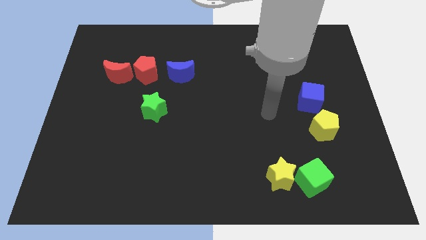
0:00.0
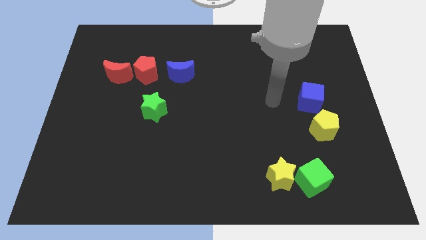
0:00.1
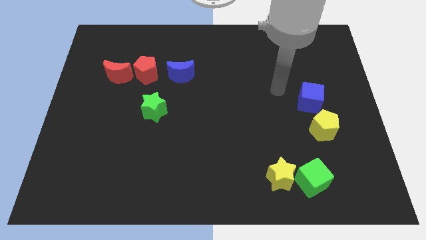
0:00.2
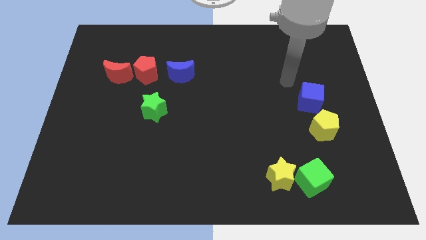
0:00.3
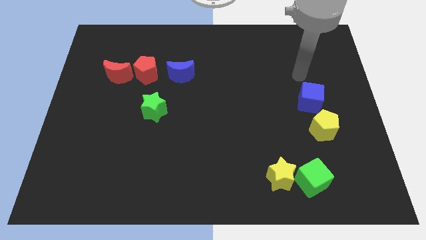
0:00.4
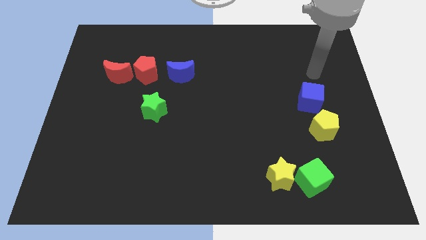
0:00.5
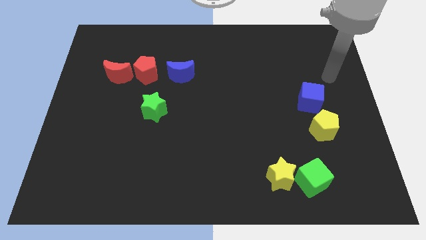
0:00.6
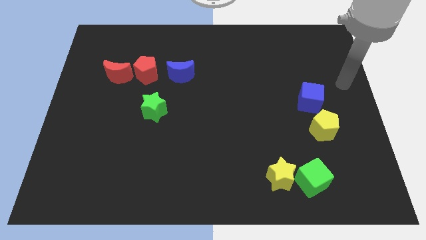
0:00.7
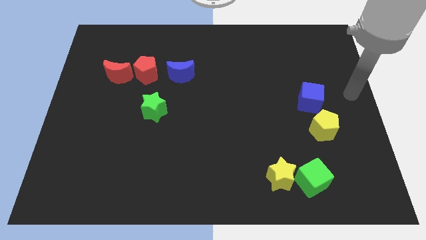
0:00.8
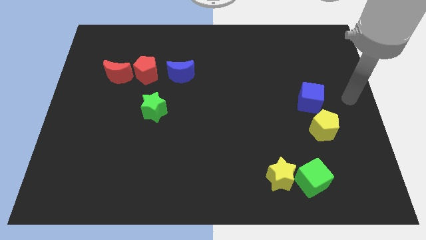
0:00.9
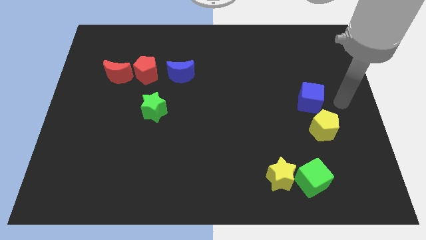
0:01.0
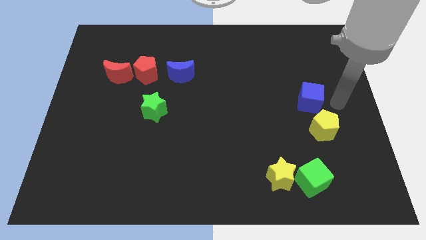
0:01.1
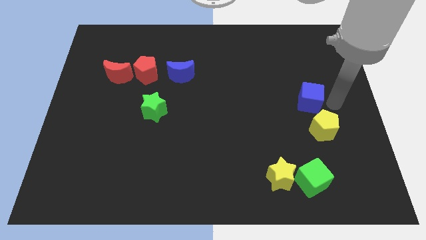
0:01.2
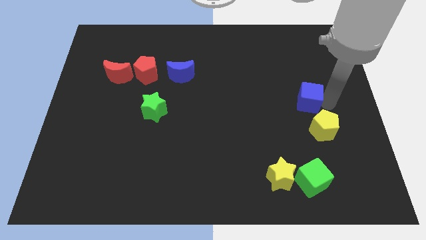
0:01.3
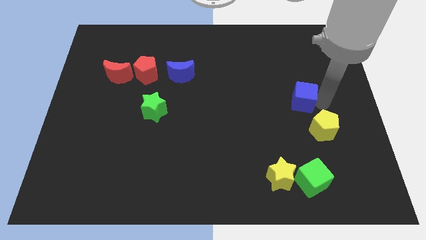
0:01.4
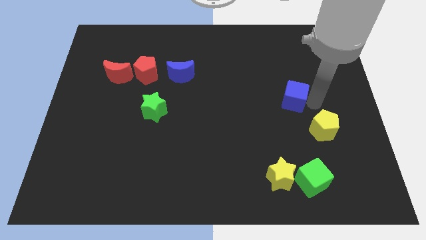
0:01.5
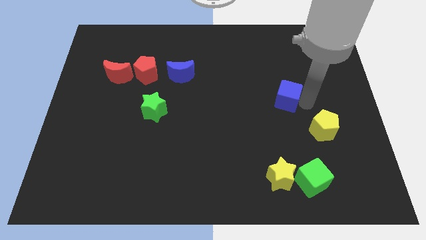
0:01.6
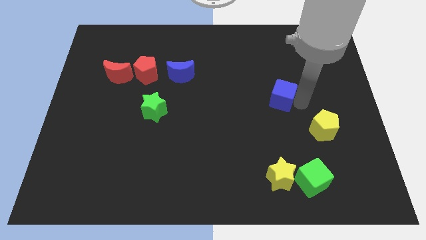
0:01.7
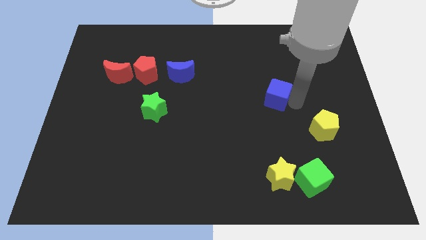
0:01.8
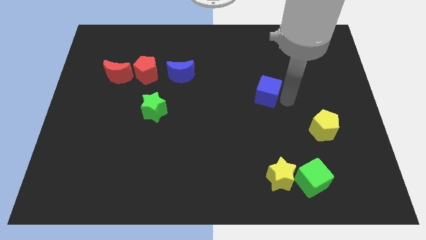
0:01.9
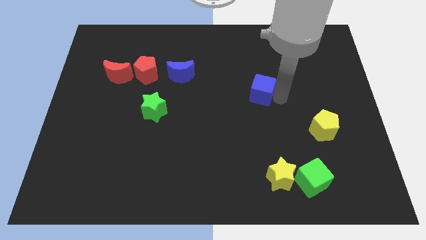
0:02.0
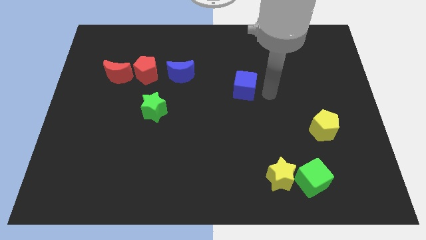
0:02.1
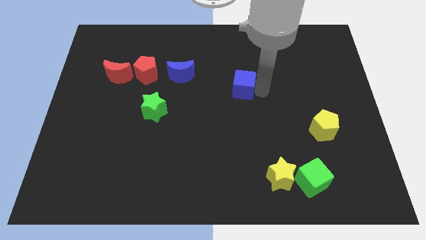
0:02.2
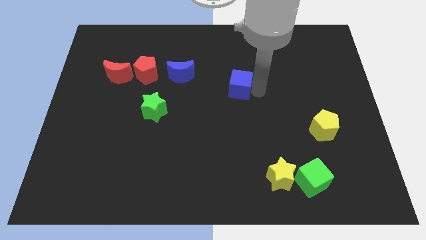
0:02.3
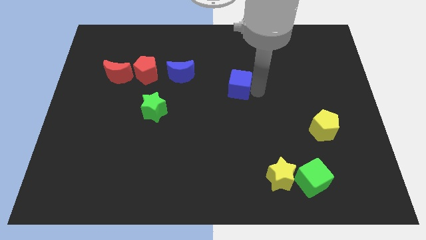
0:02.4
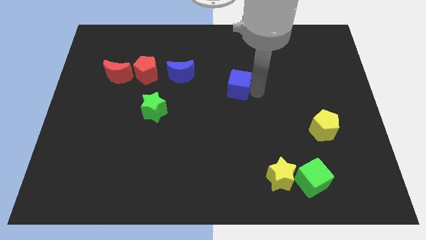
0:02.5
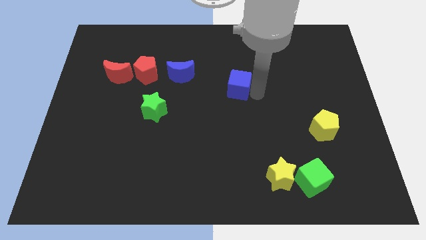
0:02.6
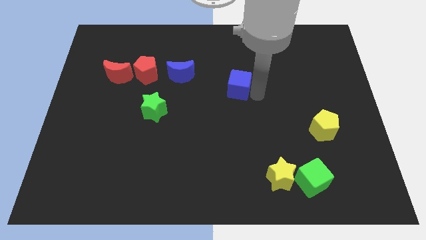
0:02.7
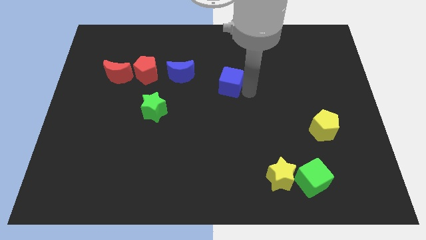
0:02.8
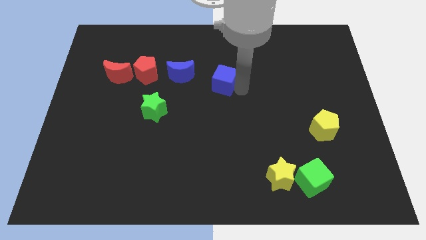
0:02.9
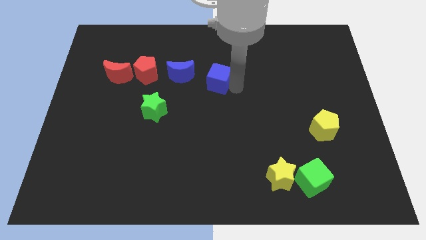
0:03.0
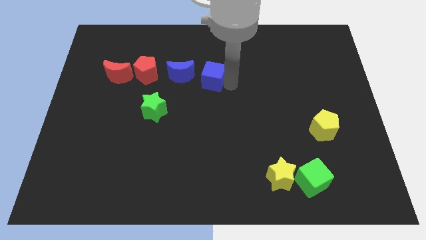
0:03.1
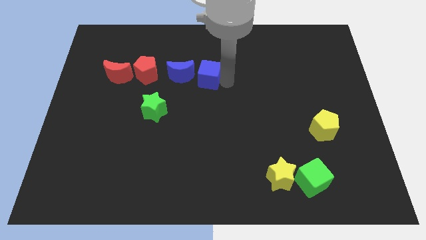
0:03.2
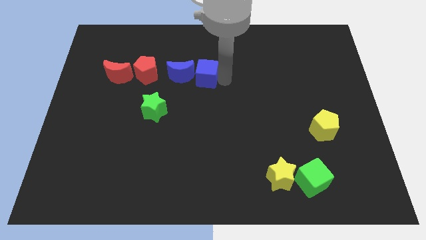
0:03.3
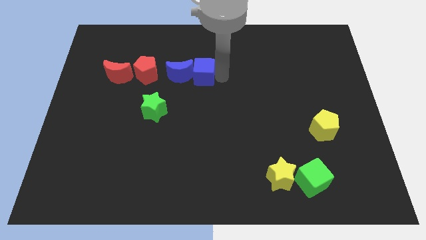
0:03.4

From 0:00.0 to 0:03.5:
move the blue cube into the blue moon

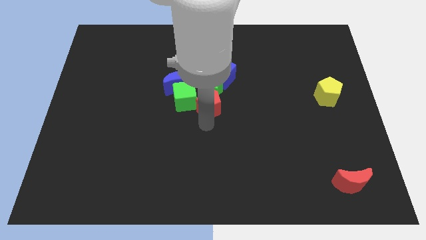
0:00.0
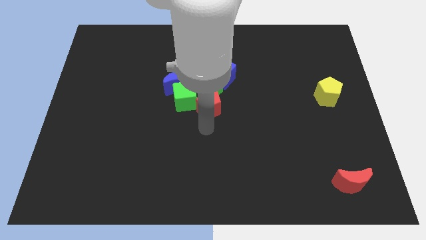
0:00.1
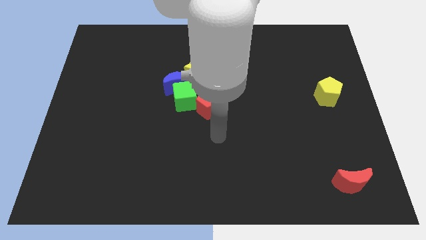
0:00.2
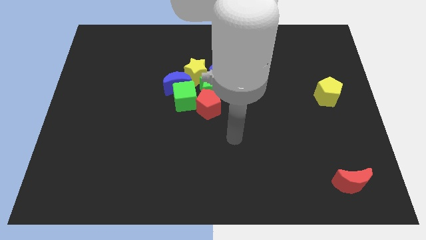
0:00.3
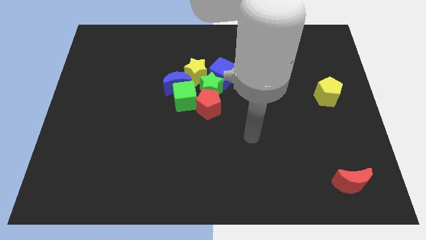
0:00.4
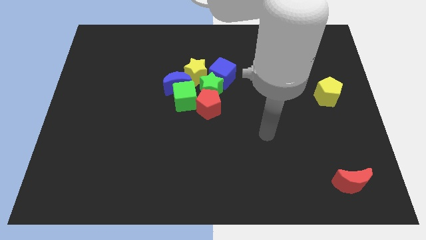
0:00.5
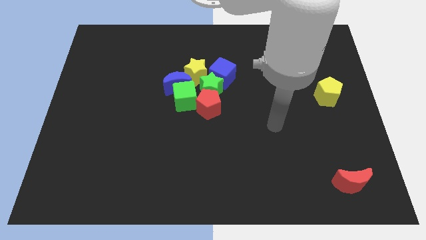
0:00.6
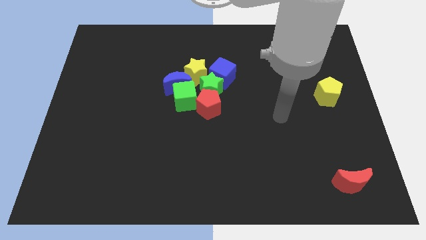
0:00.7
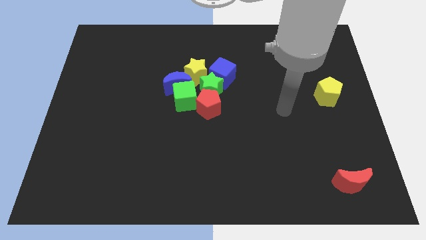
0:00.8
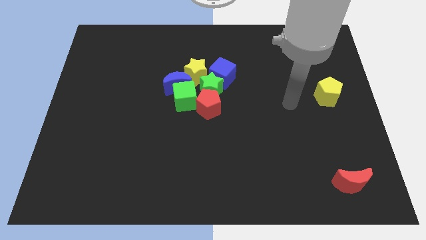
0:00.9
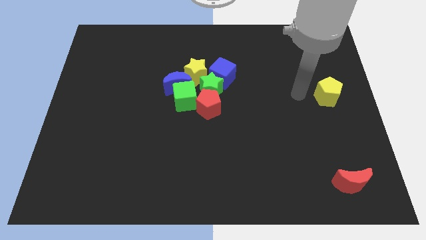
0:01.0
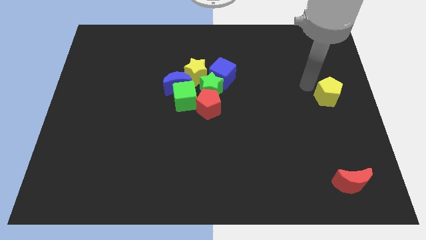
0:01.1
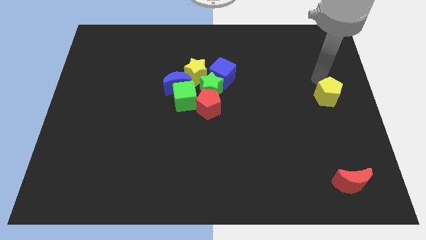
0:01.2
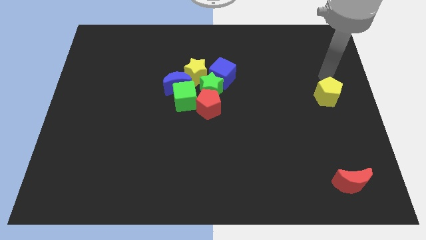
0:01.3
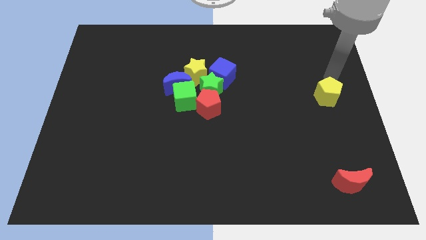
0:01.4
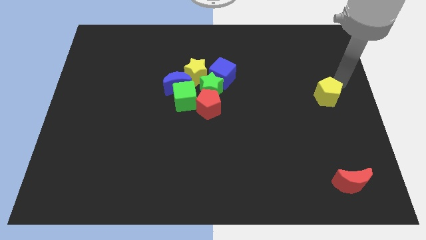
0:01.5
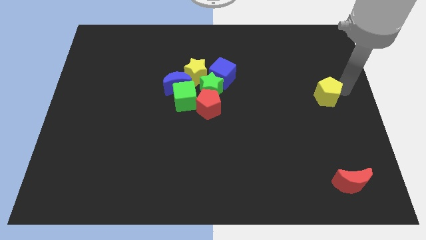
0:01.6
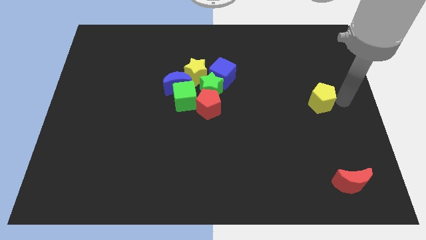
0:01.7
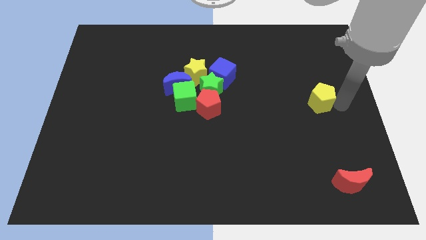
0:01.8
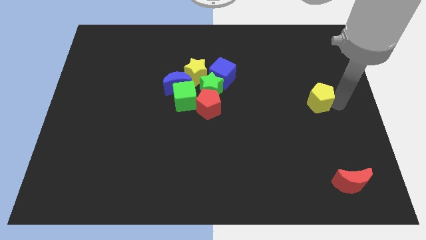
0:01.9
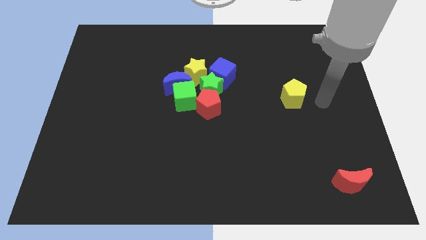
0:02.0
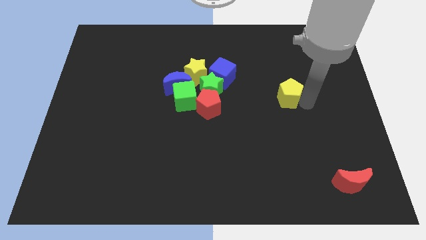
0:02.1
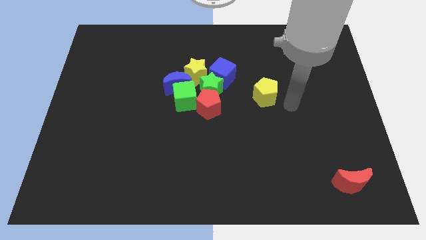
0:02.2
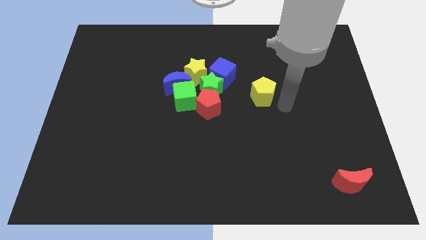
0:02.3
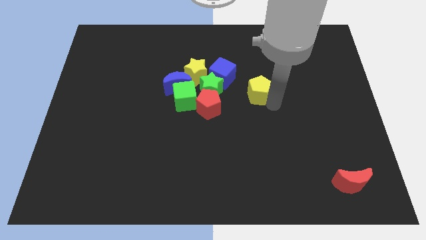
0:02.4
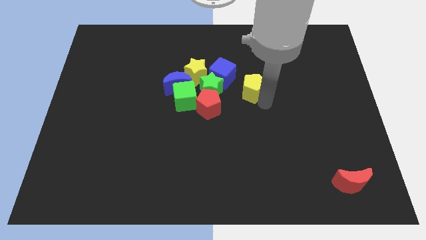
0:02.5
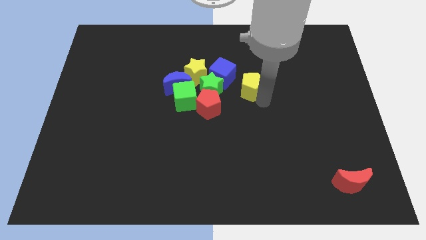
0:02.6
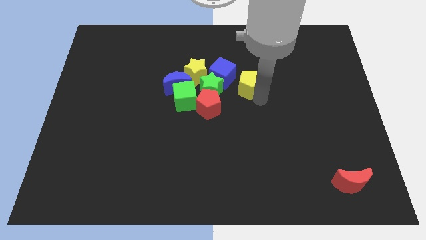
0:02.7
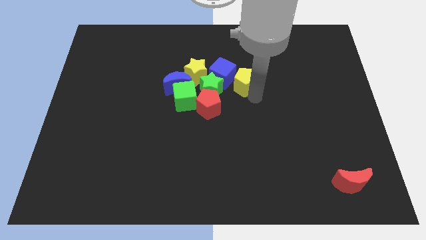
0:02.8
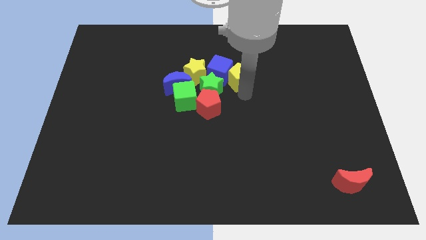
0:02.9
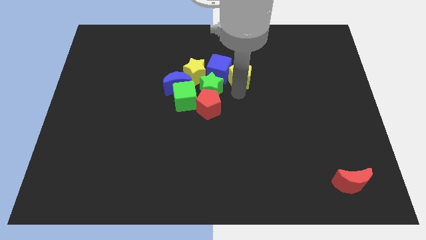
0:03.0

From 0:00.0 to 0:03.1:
move the yellow pentagon into the right side of the blue cube

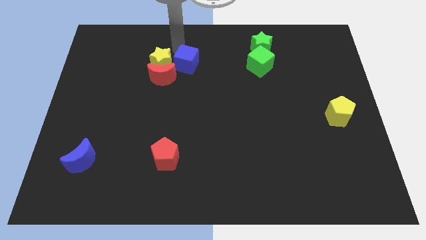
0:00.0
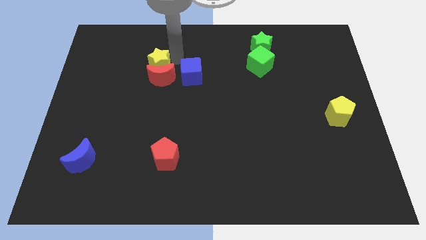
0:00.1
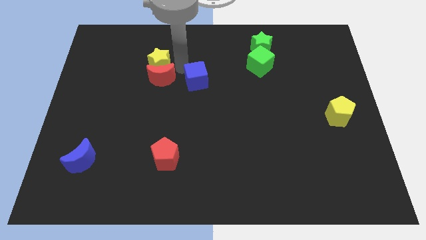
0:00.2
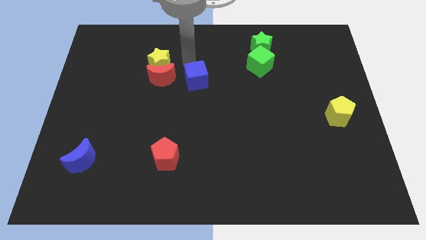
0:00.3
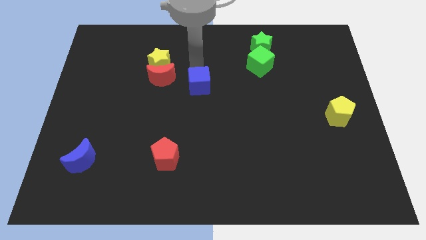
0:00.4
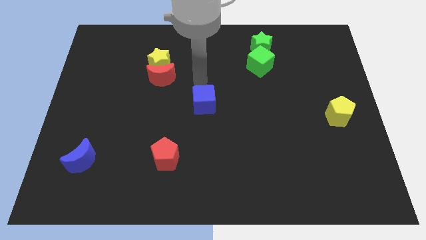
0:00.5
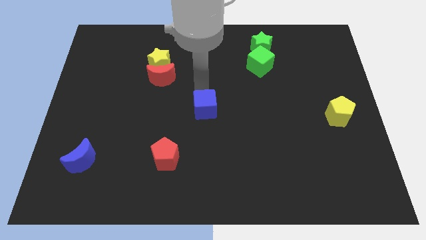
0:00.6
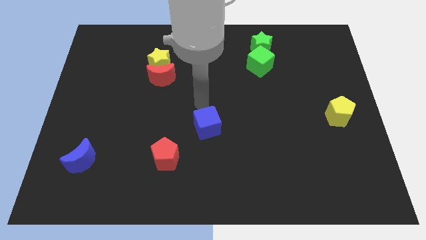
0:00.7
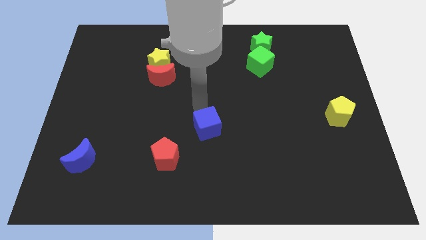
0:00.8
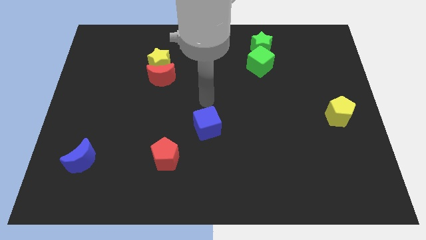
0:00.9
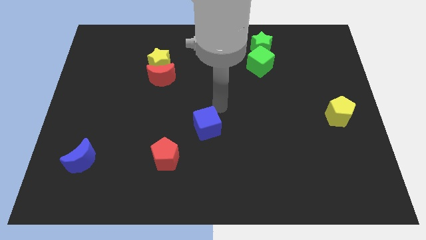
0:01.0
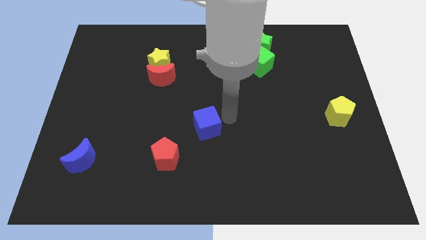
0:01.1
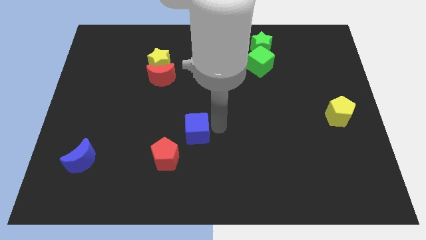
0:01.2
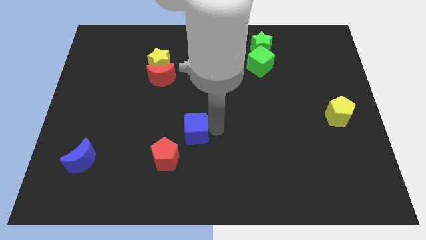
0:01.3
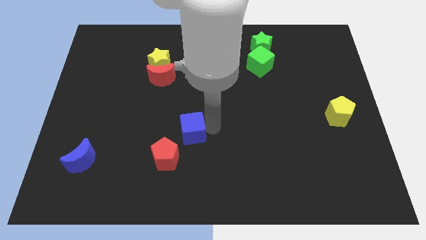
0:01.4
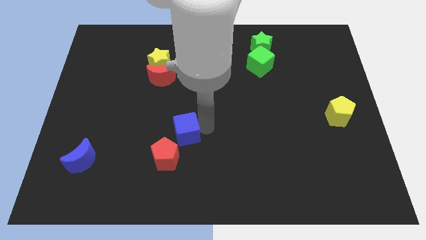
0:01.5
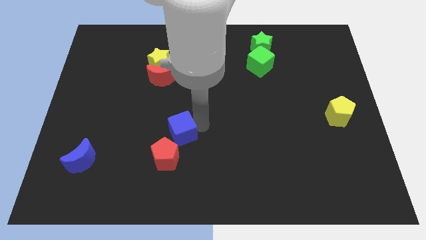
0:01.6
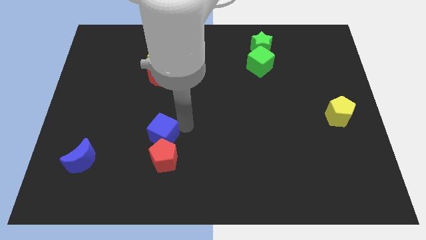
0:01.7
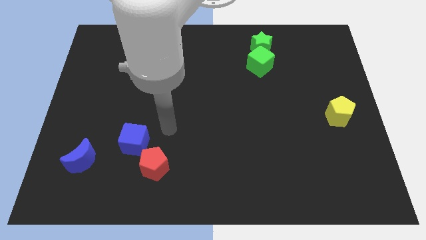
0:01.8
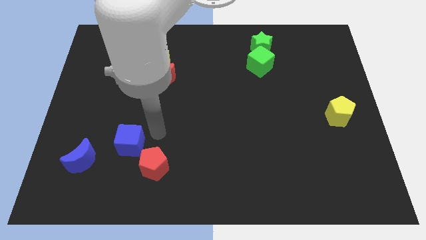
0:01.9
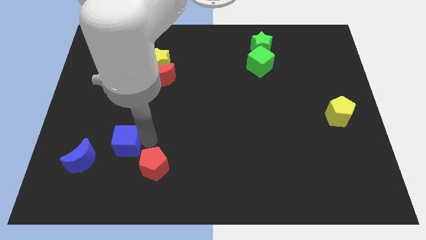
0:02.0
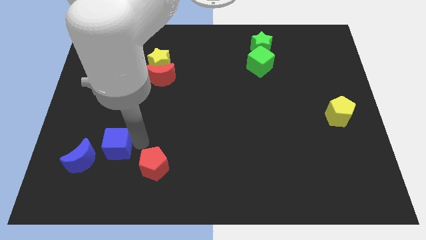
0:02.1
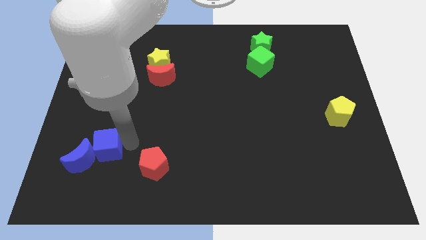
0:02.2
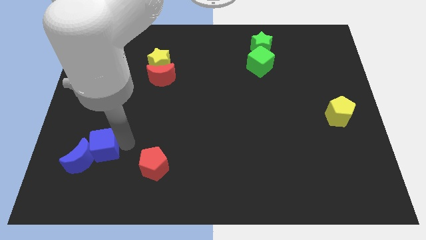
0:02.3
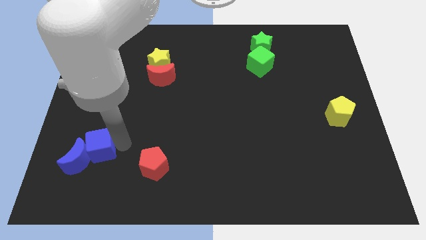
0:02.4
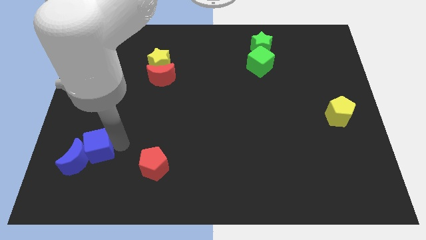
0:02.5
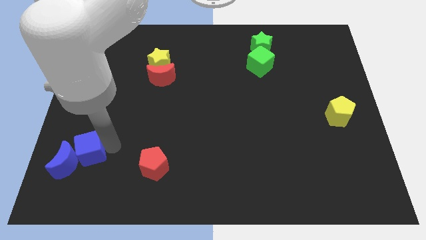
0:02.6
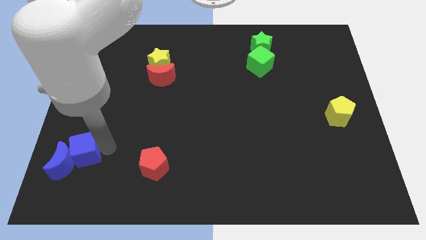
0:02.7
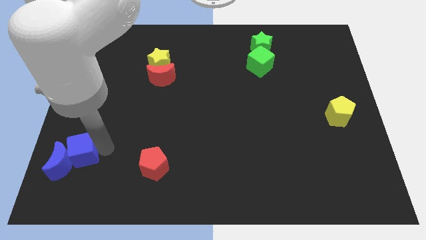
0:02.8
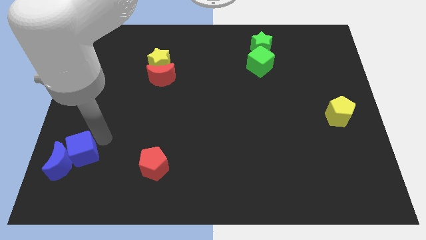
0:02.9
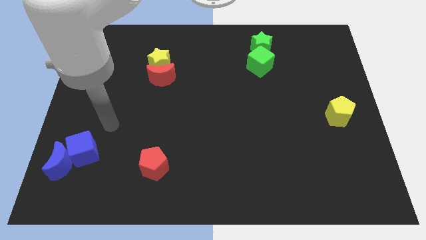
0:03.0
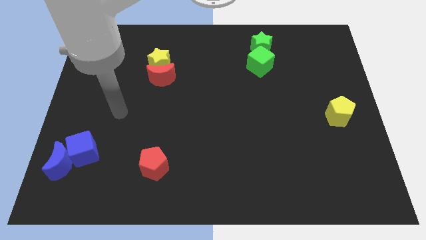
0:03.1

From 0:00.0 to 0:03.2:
place the blue cube left to the red penatgon
